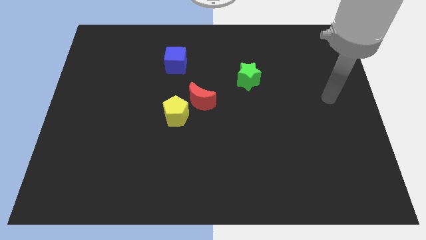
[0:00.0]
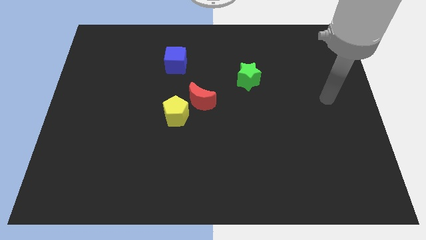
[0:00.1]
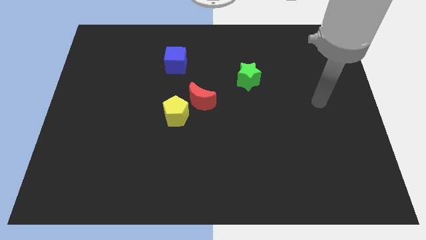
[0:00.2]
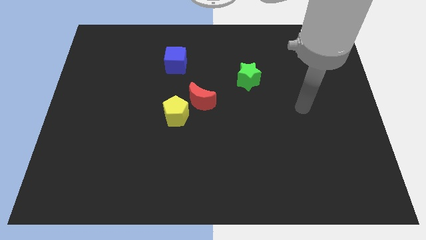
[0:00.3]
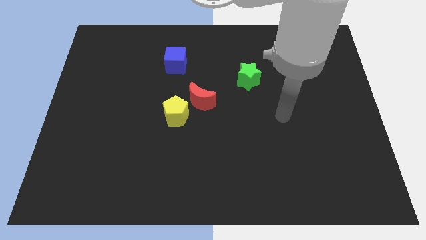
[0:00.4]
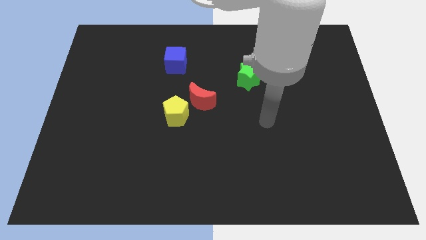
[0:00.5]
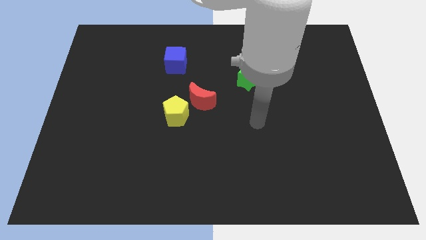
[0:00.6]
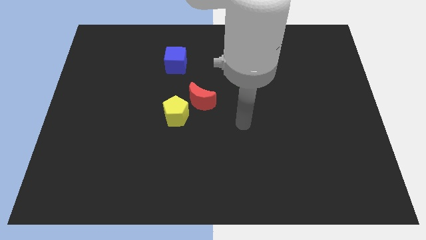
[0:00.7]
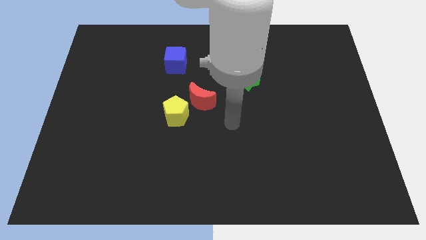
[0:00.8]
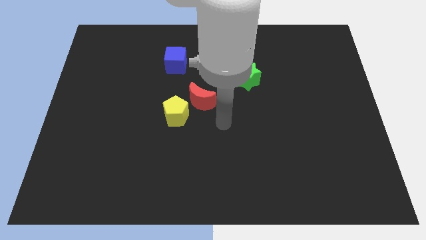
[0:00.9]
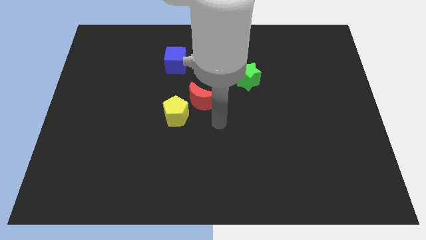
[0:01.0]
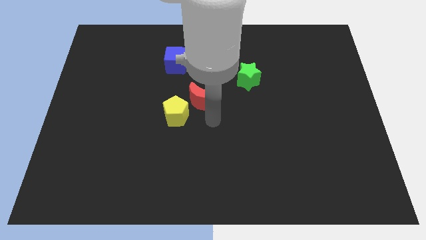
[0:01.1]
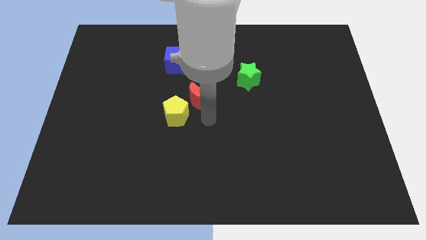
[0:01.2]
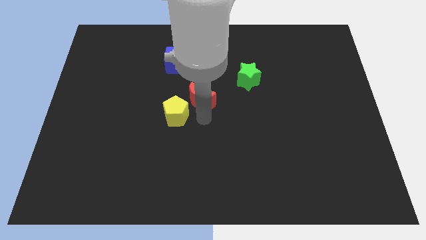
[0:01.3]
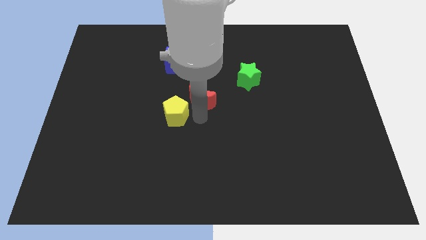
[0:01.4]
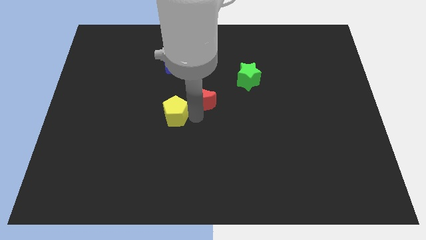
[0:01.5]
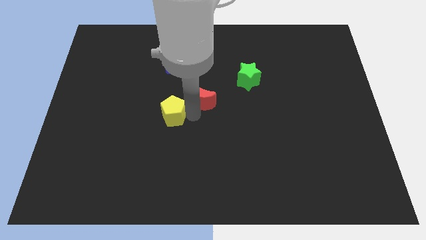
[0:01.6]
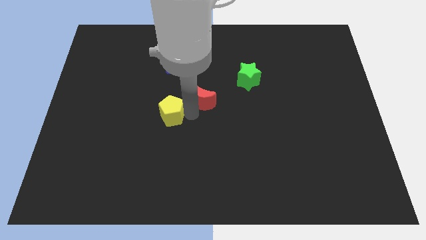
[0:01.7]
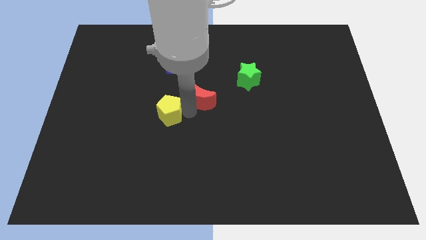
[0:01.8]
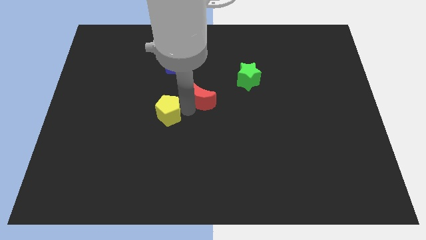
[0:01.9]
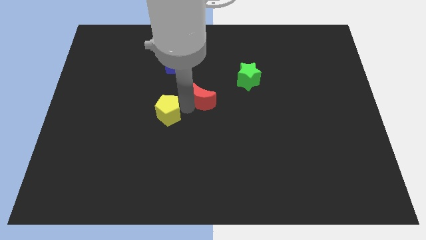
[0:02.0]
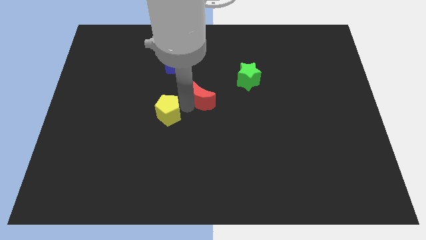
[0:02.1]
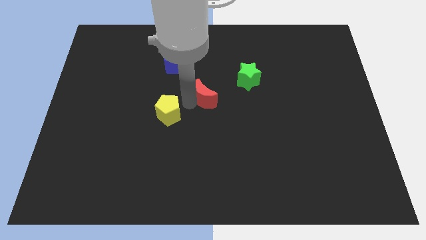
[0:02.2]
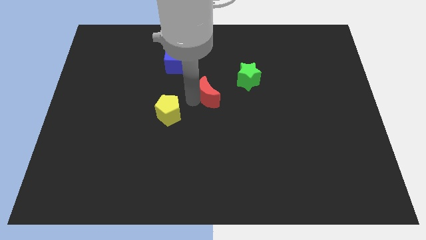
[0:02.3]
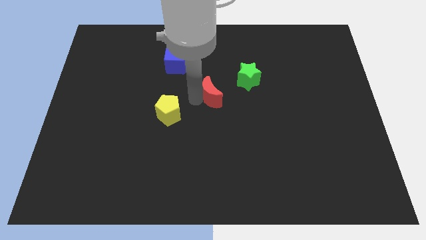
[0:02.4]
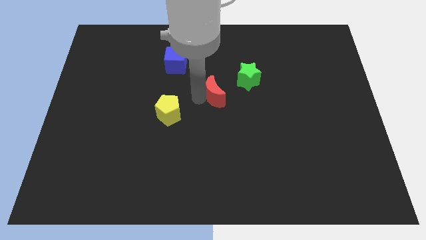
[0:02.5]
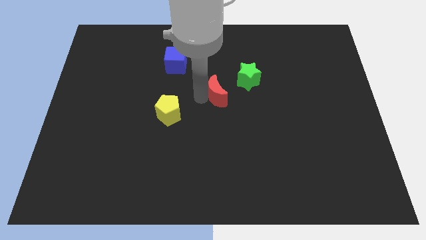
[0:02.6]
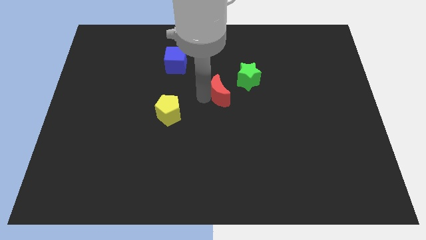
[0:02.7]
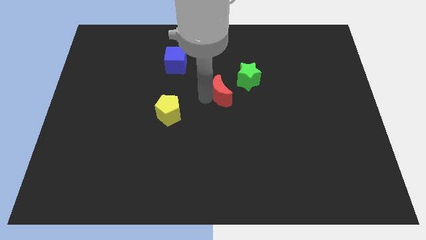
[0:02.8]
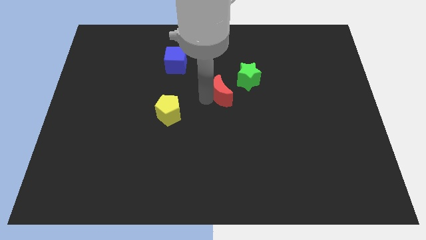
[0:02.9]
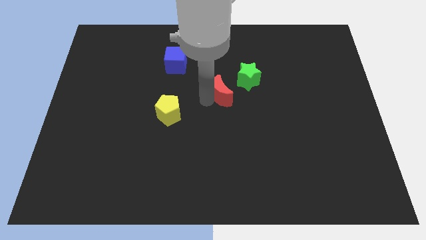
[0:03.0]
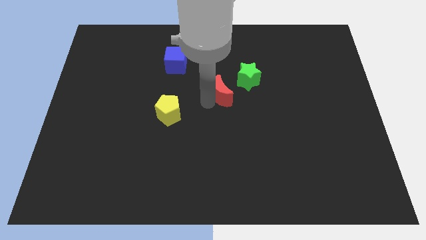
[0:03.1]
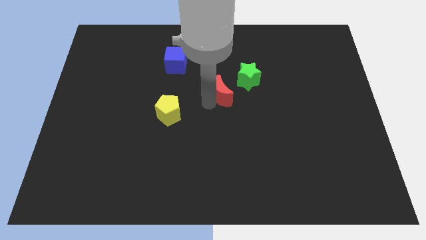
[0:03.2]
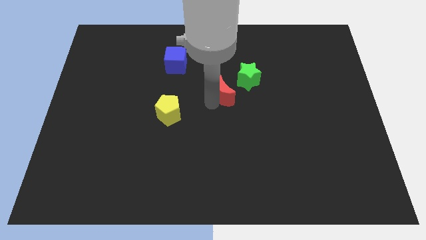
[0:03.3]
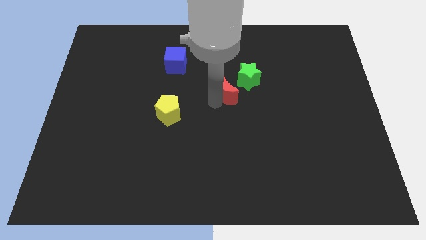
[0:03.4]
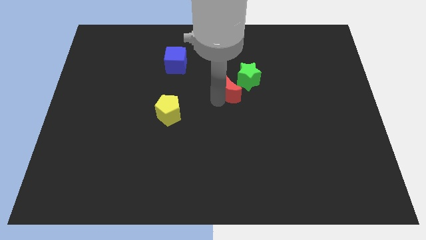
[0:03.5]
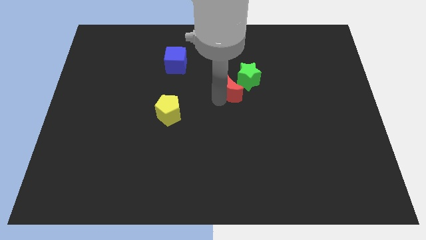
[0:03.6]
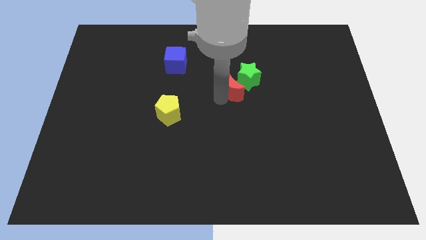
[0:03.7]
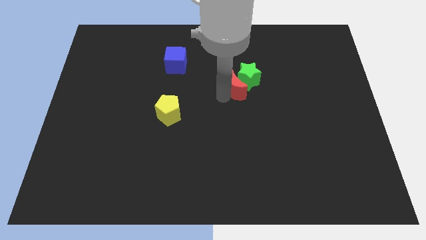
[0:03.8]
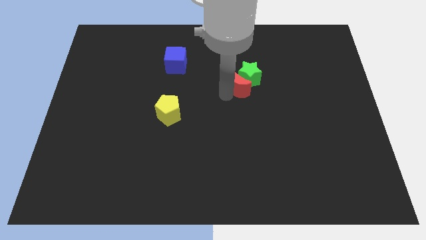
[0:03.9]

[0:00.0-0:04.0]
slide the red block towards the star

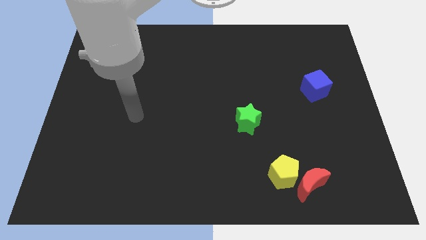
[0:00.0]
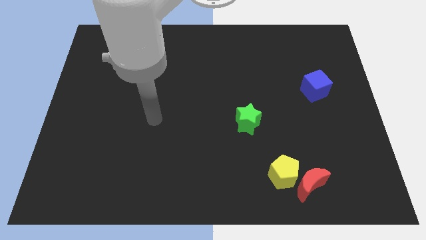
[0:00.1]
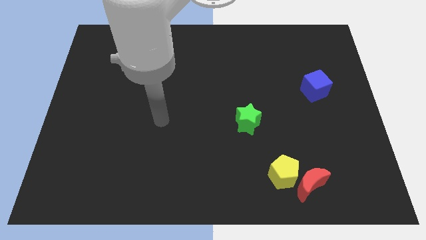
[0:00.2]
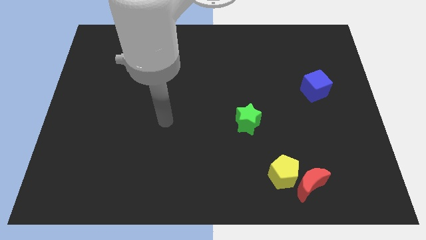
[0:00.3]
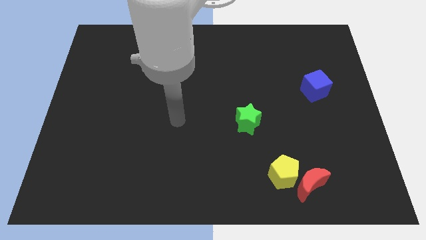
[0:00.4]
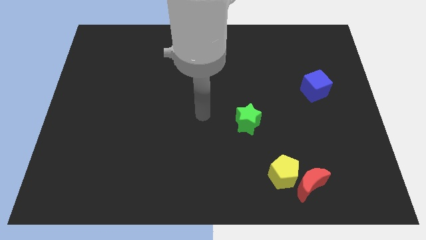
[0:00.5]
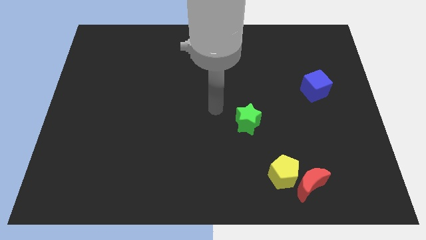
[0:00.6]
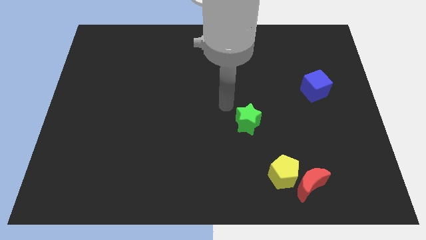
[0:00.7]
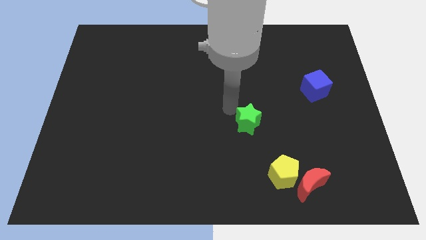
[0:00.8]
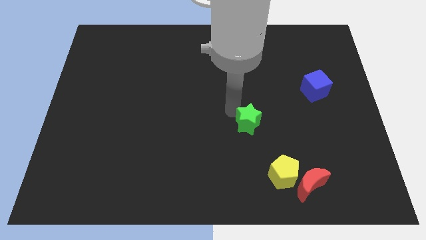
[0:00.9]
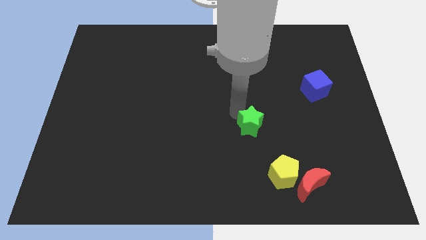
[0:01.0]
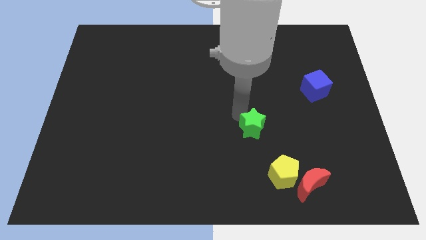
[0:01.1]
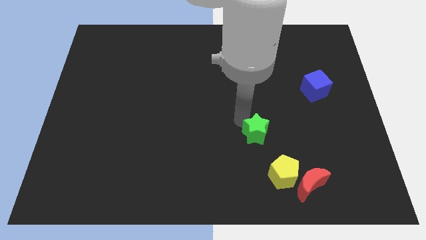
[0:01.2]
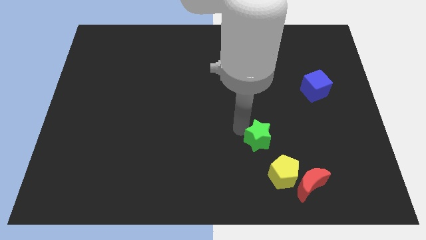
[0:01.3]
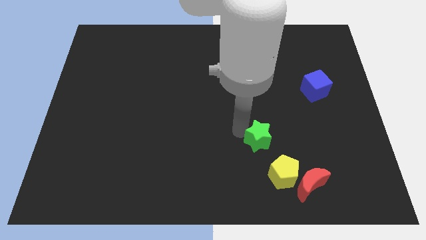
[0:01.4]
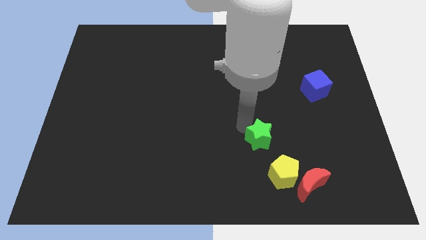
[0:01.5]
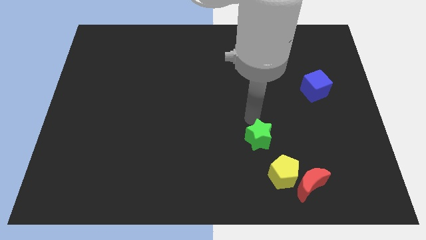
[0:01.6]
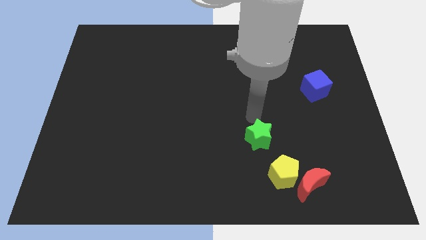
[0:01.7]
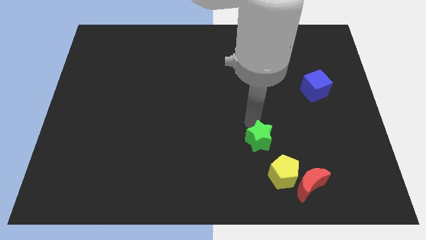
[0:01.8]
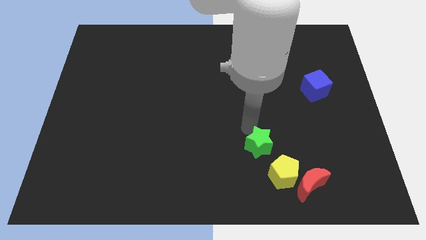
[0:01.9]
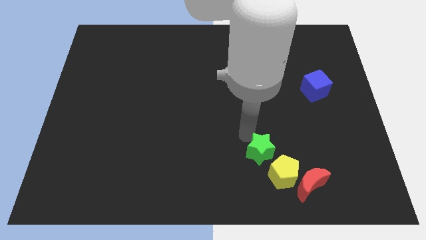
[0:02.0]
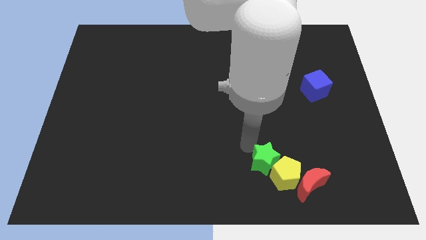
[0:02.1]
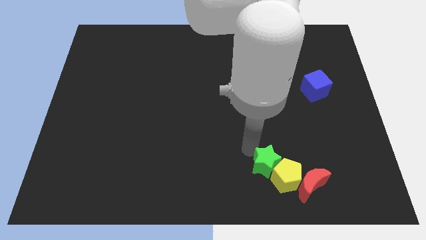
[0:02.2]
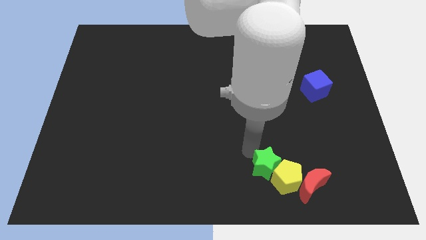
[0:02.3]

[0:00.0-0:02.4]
push the star next to the yellow pentagon

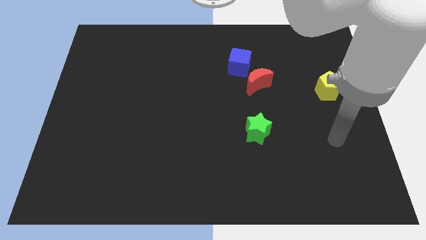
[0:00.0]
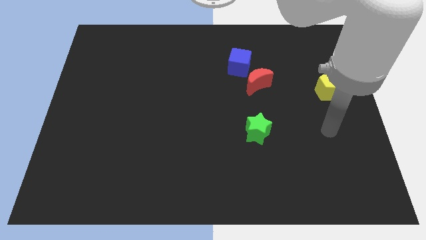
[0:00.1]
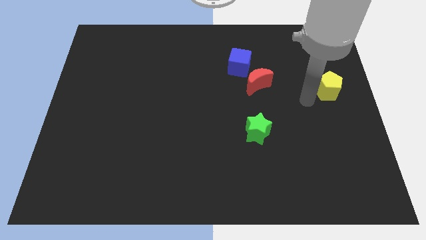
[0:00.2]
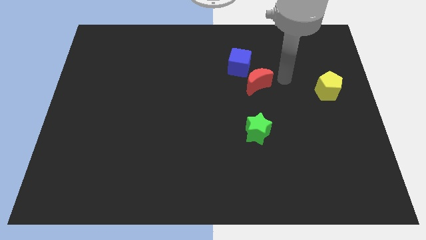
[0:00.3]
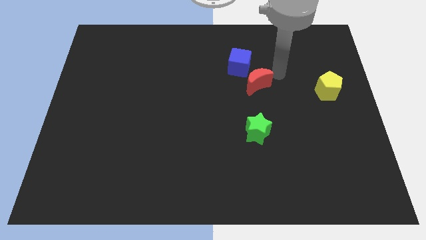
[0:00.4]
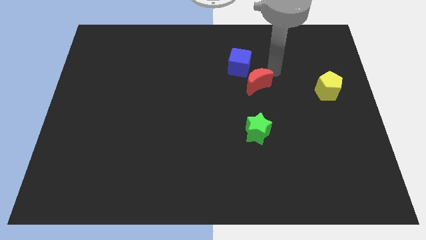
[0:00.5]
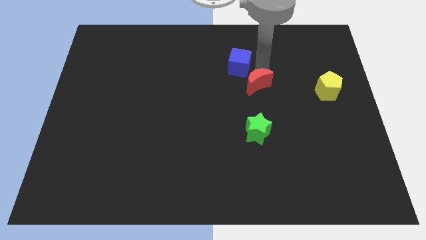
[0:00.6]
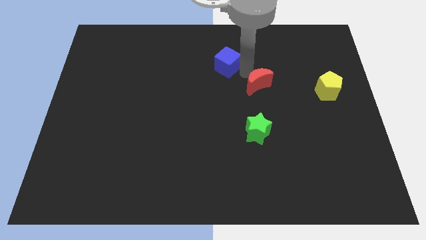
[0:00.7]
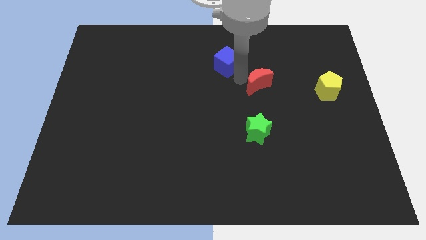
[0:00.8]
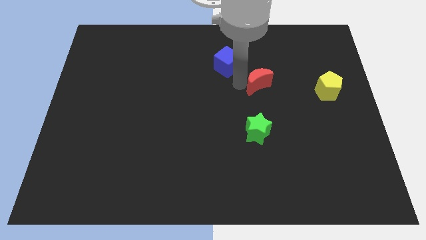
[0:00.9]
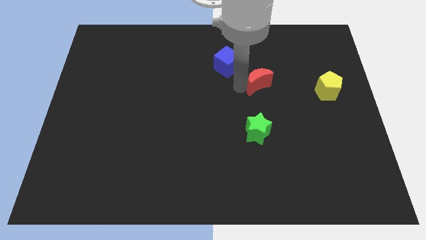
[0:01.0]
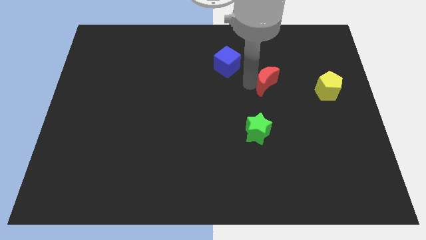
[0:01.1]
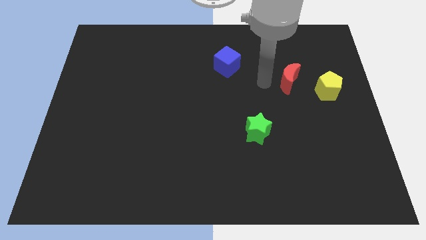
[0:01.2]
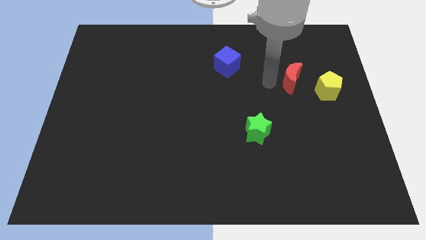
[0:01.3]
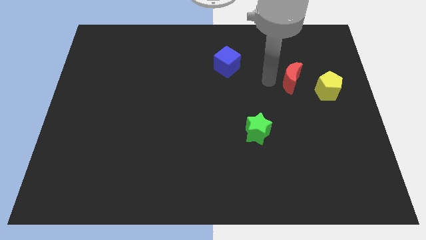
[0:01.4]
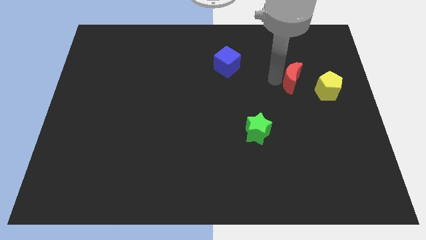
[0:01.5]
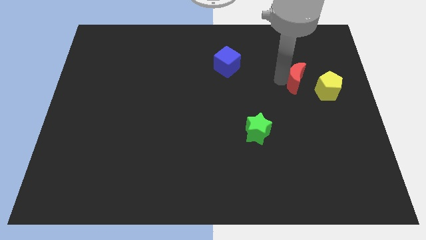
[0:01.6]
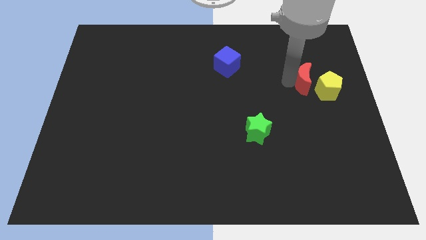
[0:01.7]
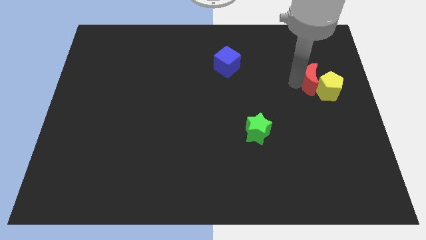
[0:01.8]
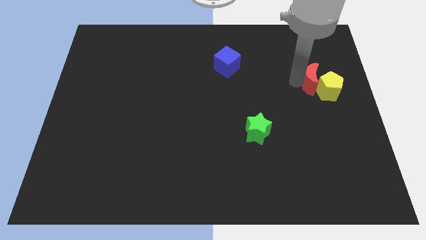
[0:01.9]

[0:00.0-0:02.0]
put the red block towards the pentagon
